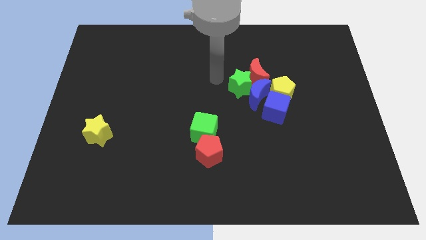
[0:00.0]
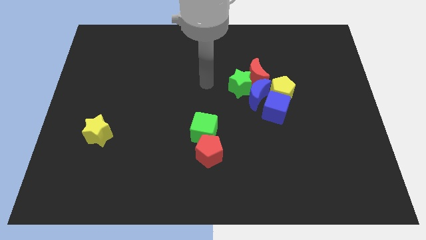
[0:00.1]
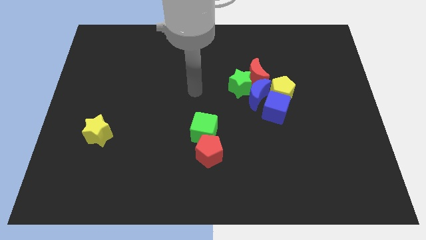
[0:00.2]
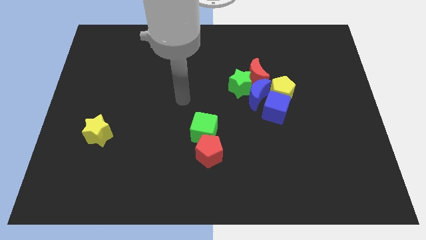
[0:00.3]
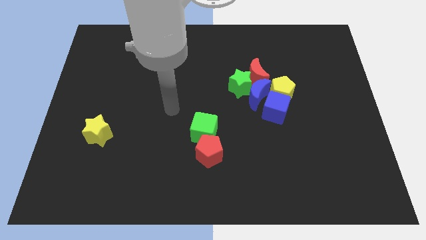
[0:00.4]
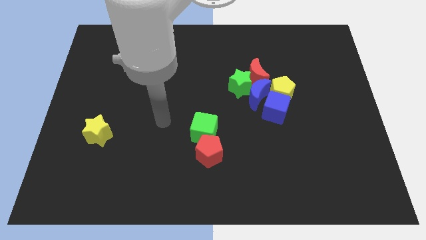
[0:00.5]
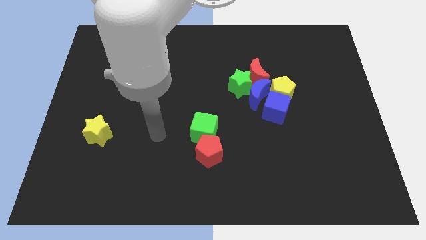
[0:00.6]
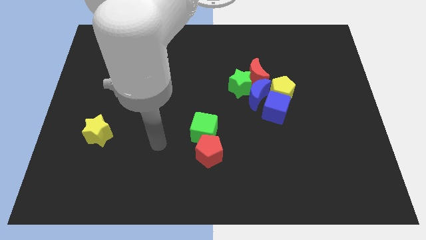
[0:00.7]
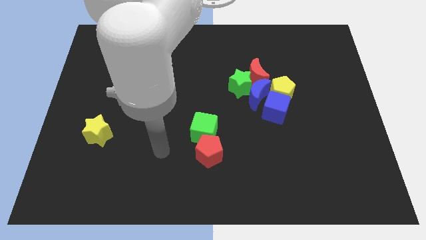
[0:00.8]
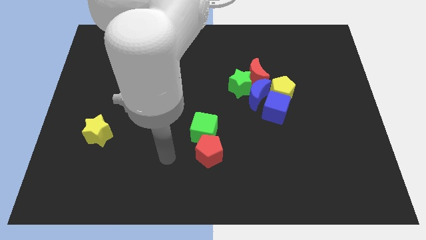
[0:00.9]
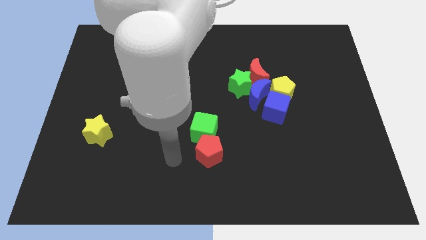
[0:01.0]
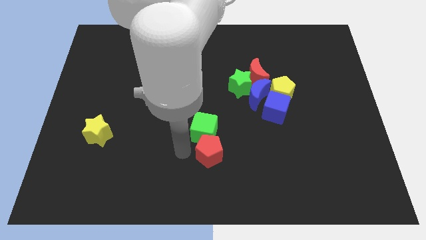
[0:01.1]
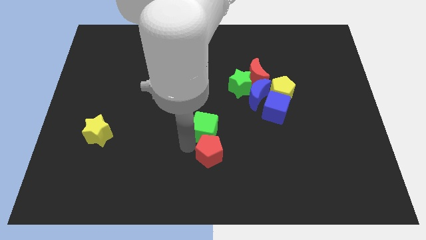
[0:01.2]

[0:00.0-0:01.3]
move your arm to the bottom of the green cube

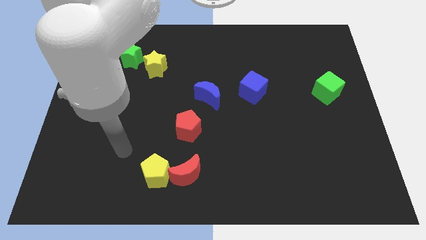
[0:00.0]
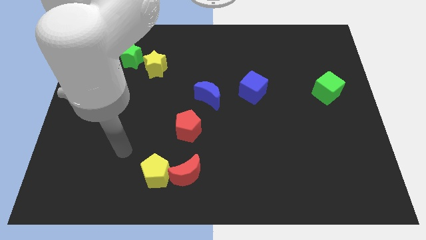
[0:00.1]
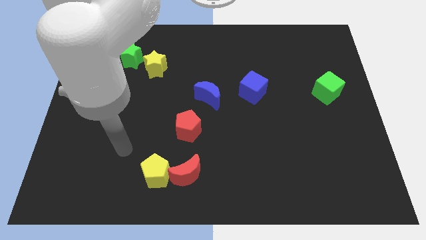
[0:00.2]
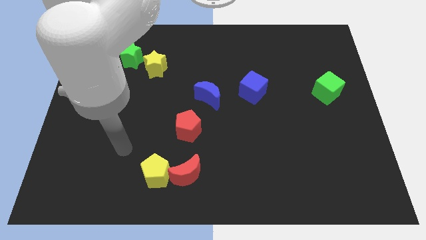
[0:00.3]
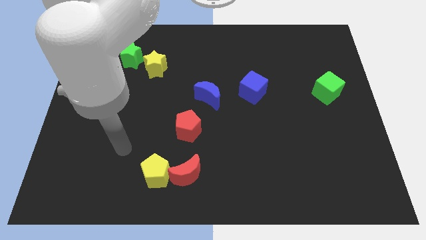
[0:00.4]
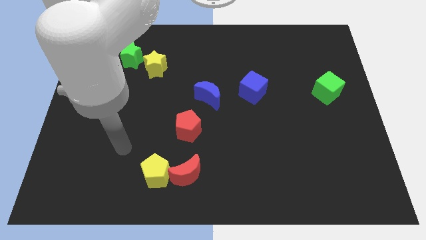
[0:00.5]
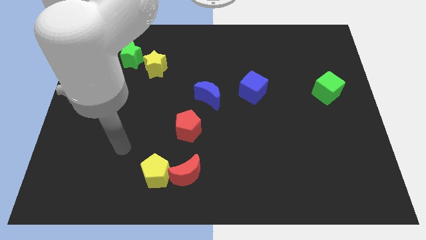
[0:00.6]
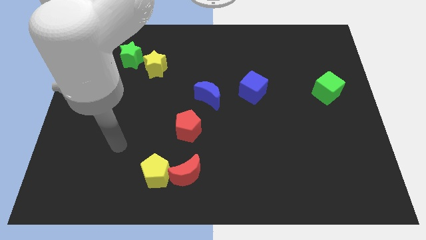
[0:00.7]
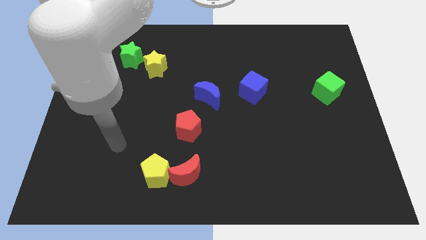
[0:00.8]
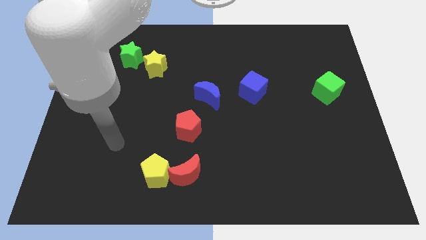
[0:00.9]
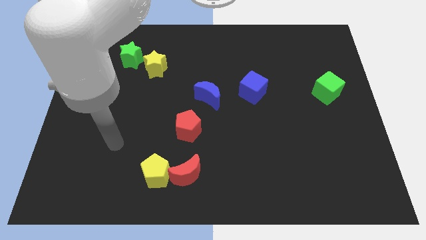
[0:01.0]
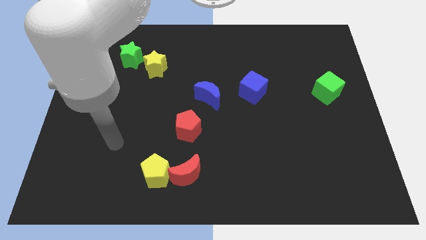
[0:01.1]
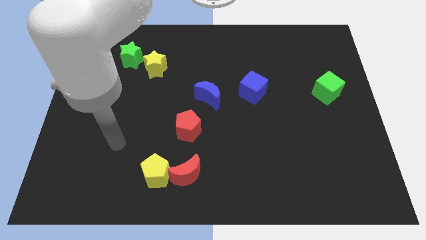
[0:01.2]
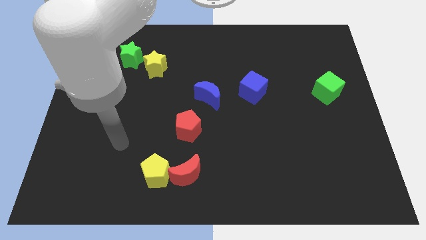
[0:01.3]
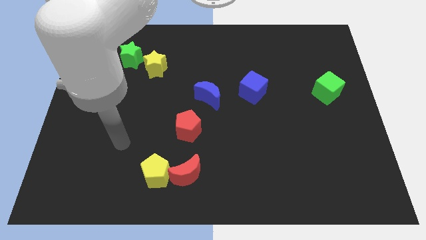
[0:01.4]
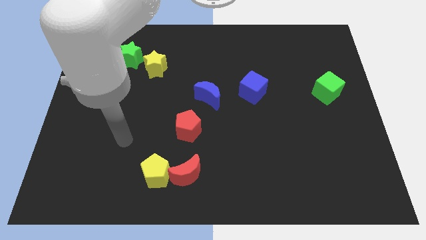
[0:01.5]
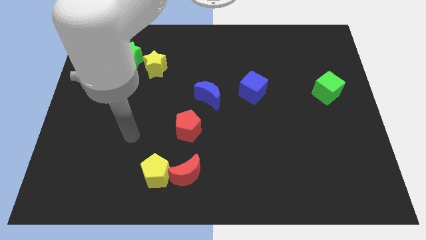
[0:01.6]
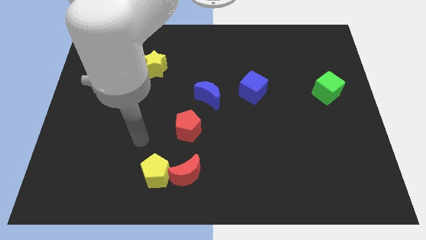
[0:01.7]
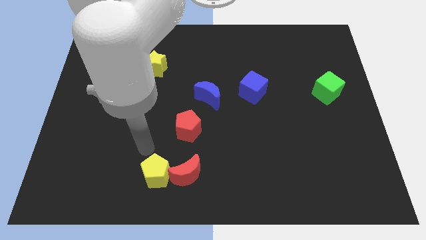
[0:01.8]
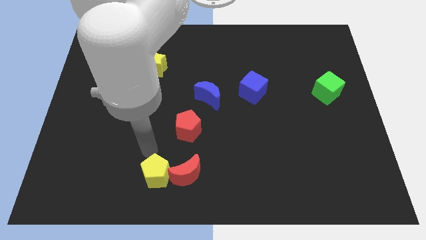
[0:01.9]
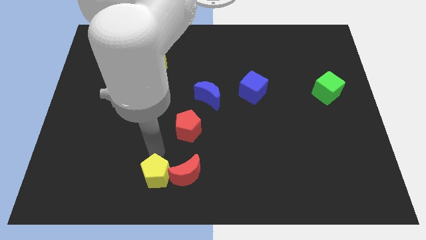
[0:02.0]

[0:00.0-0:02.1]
move the arm to the top of the yellow pentagon

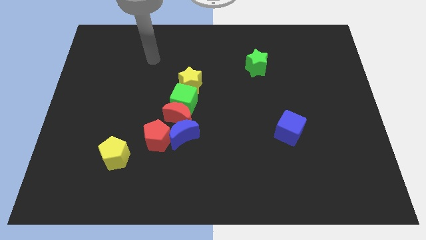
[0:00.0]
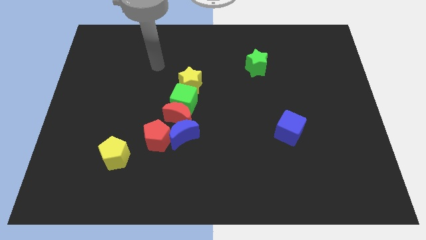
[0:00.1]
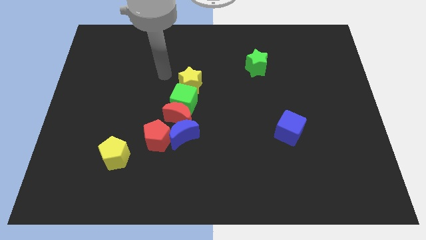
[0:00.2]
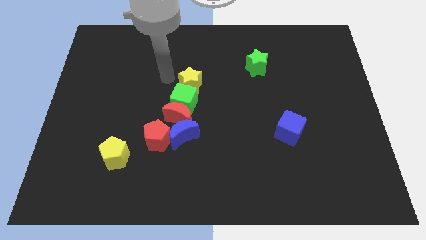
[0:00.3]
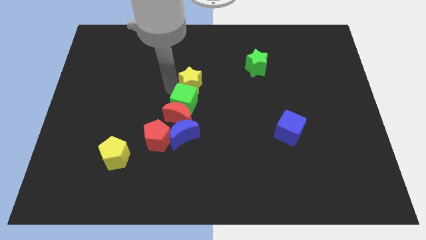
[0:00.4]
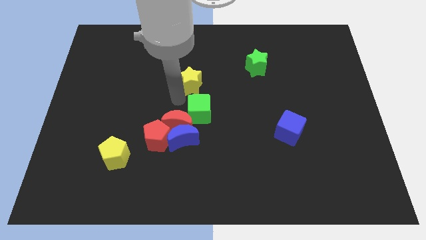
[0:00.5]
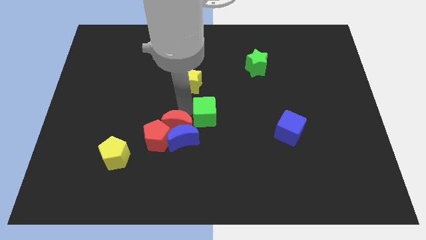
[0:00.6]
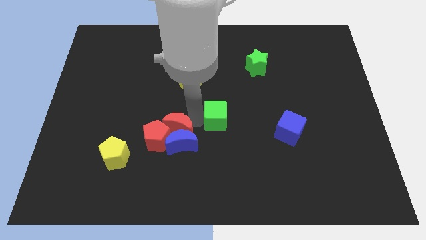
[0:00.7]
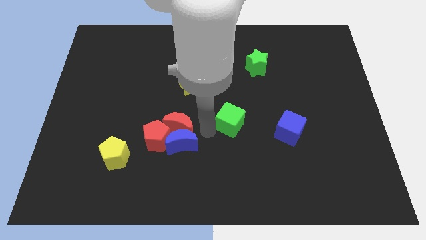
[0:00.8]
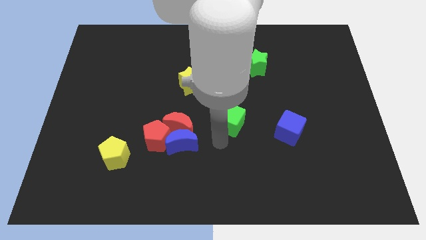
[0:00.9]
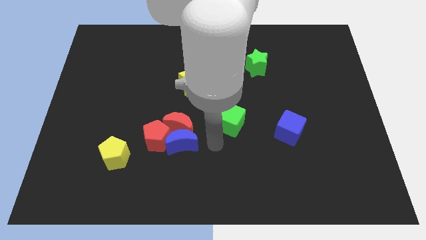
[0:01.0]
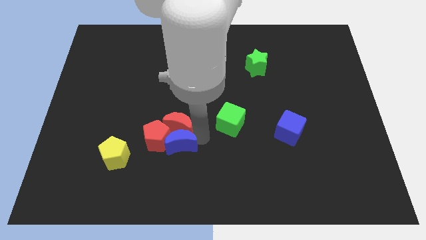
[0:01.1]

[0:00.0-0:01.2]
push the green cube towards the blue cube

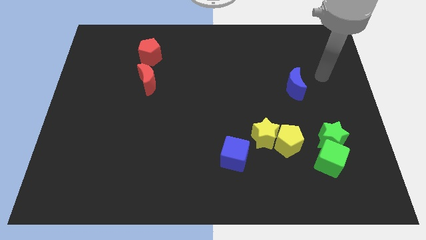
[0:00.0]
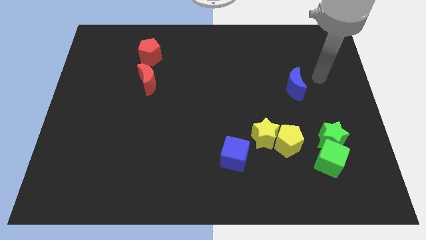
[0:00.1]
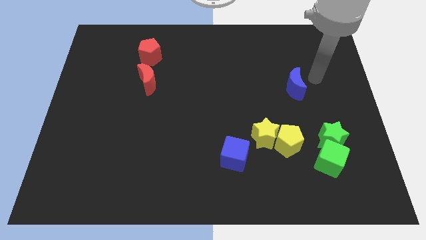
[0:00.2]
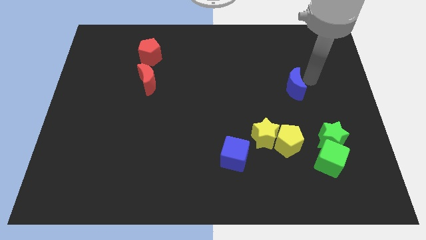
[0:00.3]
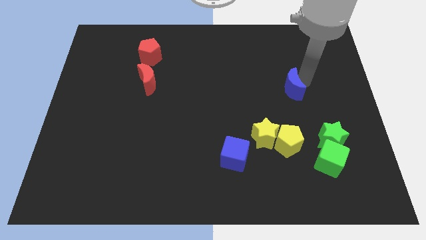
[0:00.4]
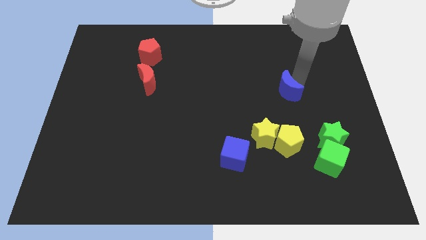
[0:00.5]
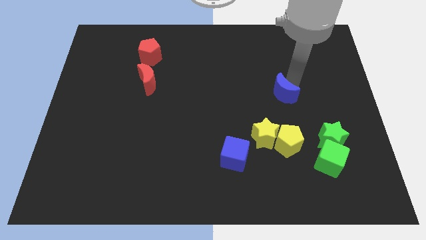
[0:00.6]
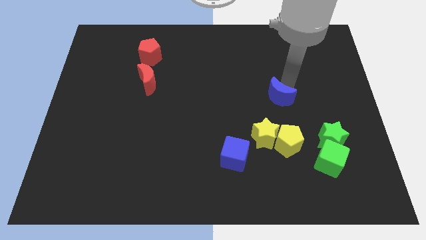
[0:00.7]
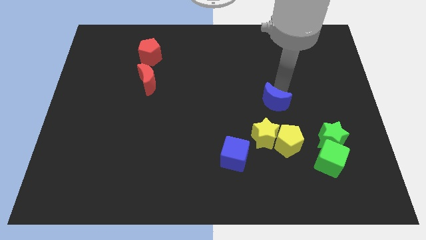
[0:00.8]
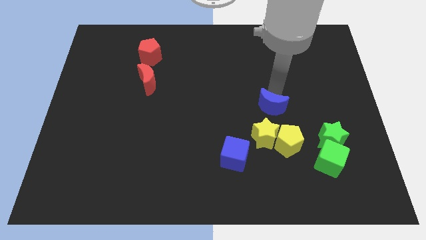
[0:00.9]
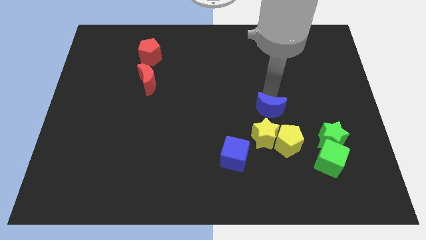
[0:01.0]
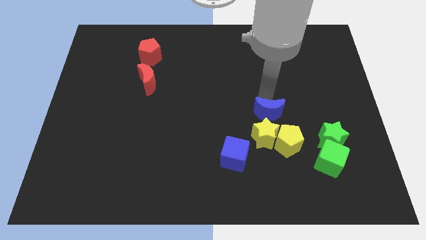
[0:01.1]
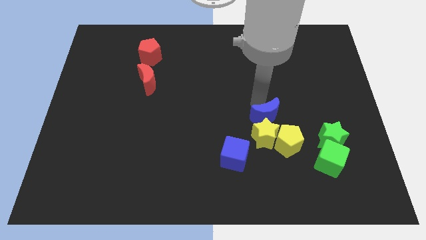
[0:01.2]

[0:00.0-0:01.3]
place the blue crescent above the yellow star

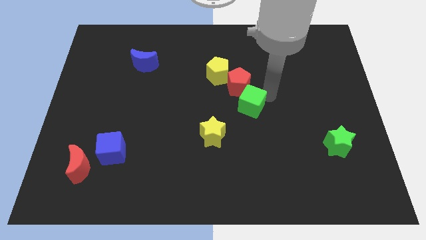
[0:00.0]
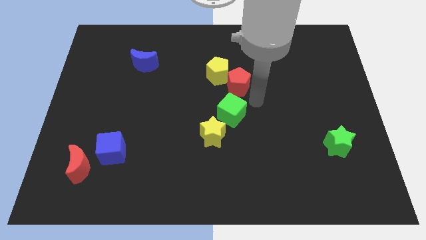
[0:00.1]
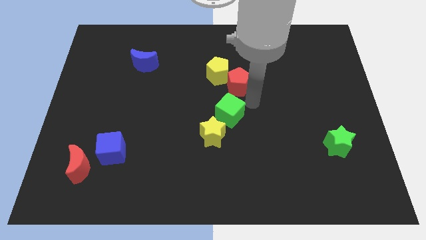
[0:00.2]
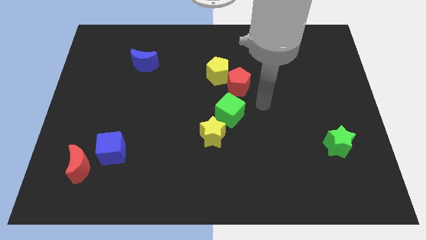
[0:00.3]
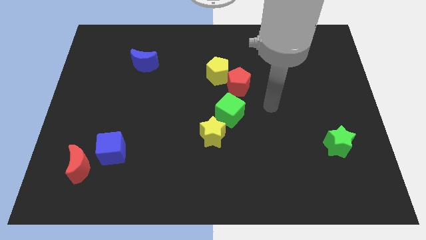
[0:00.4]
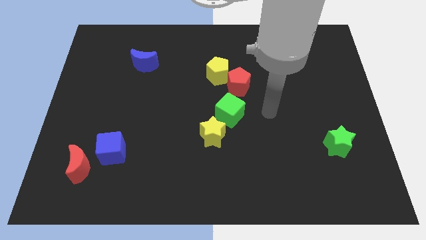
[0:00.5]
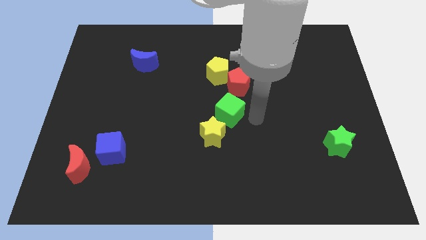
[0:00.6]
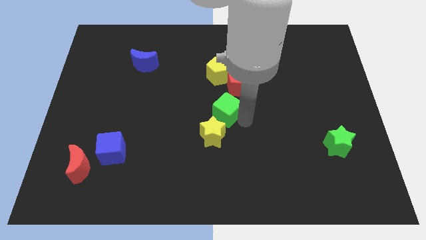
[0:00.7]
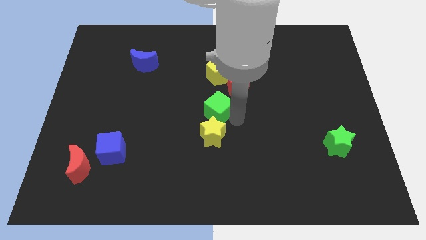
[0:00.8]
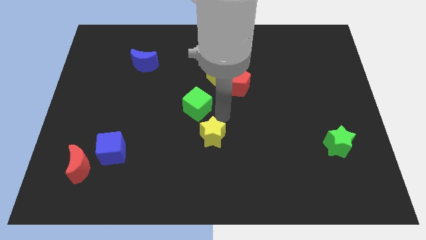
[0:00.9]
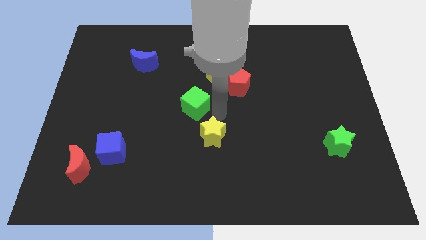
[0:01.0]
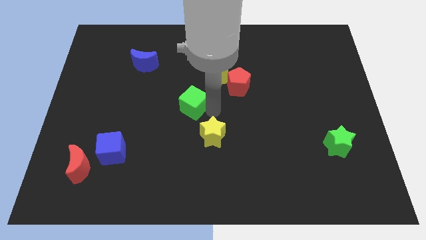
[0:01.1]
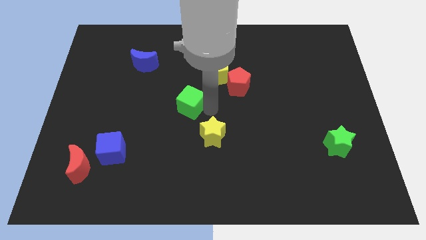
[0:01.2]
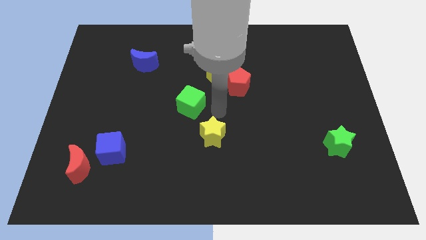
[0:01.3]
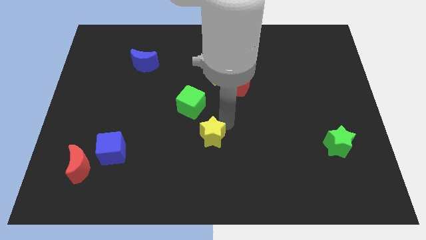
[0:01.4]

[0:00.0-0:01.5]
move the green cube towards the left

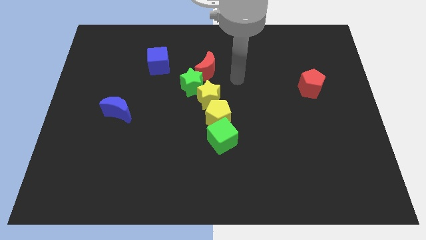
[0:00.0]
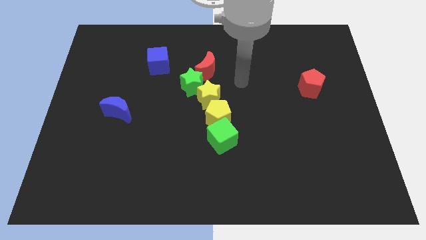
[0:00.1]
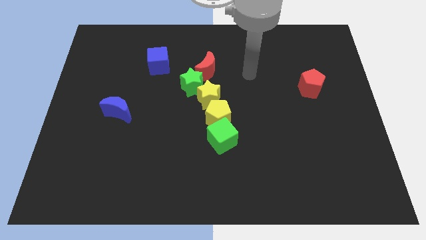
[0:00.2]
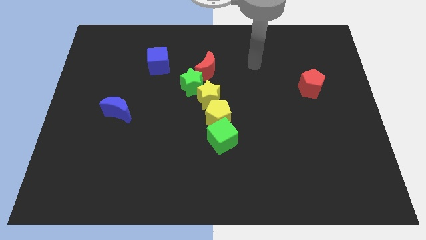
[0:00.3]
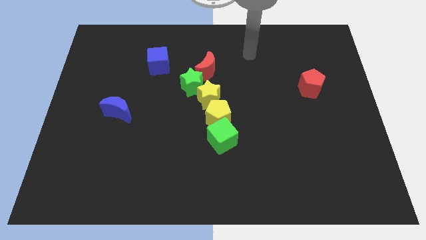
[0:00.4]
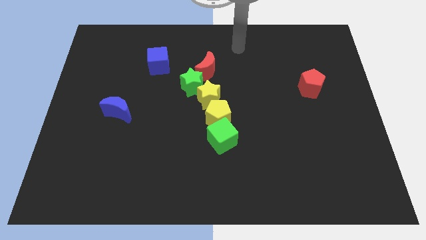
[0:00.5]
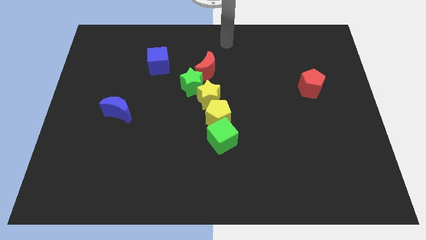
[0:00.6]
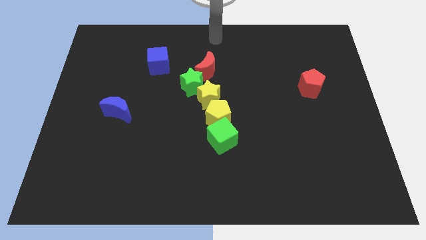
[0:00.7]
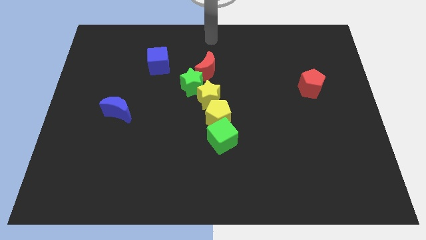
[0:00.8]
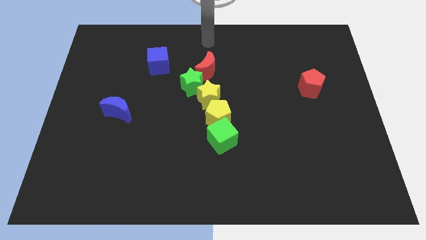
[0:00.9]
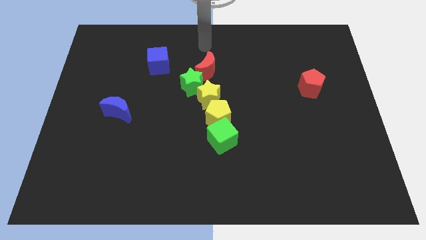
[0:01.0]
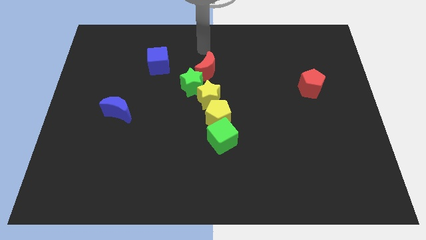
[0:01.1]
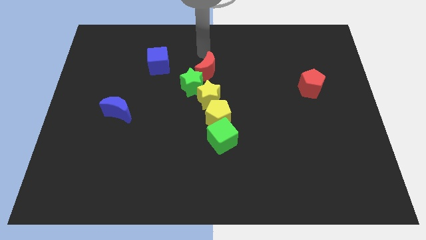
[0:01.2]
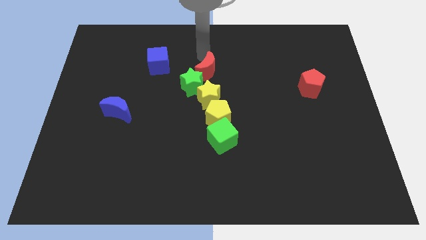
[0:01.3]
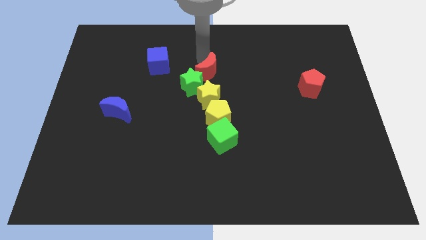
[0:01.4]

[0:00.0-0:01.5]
place the arm above the red moon
